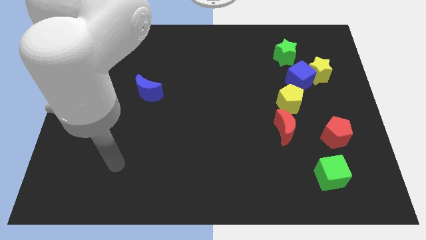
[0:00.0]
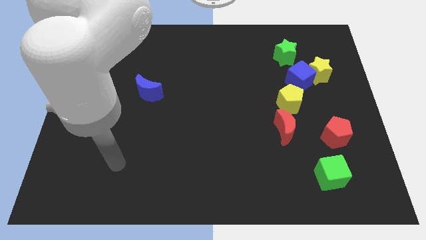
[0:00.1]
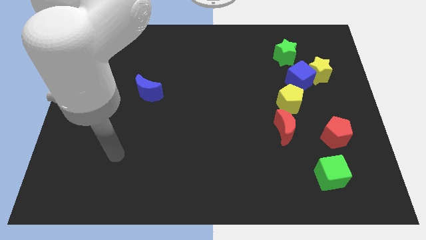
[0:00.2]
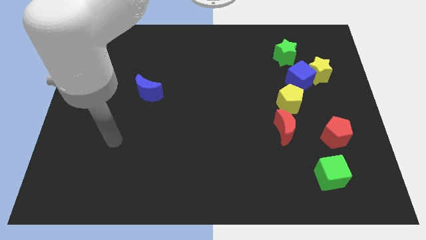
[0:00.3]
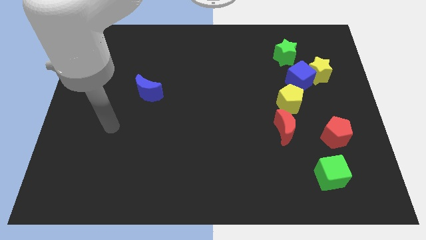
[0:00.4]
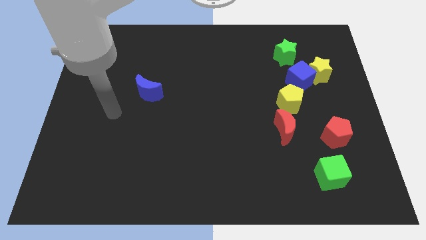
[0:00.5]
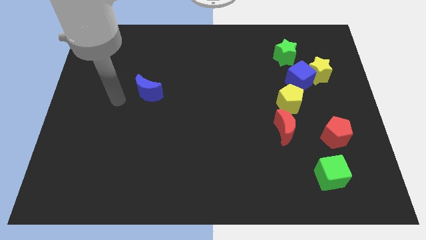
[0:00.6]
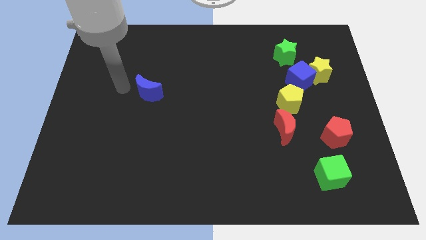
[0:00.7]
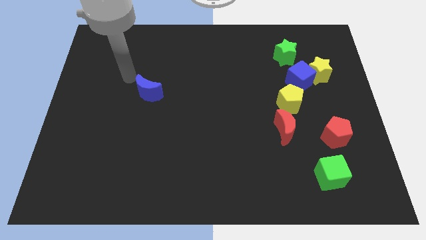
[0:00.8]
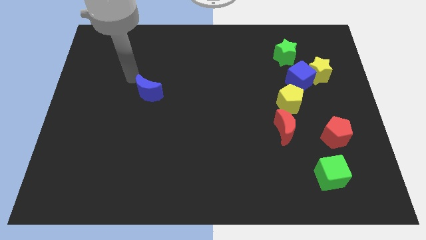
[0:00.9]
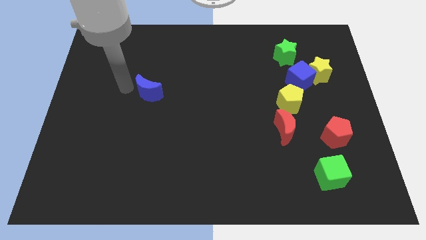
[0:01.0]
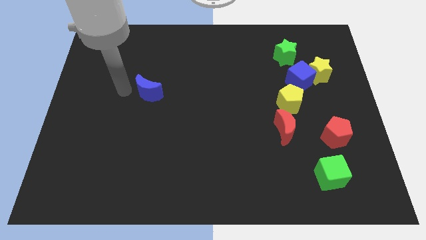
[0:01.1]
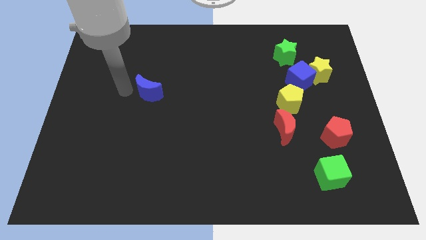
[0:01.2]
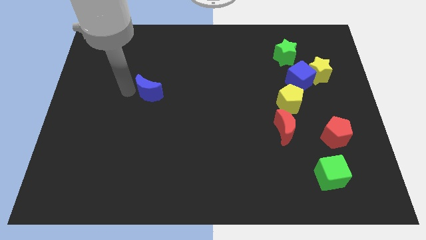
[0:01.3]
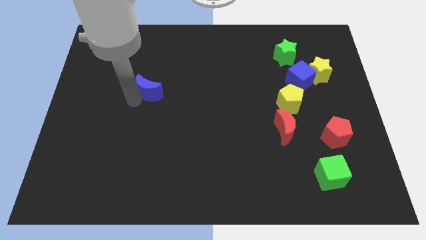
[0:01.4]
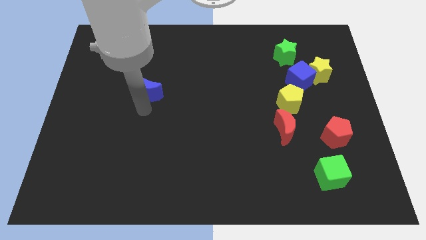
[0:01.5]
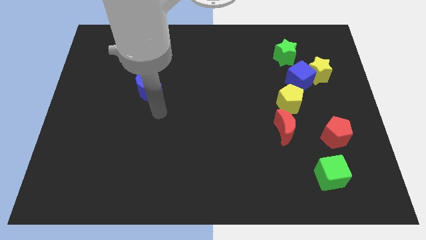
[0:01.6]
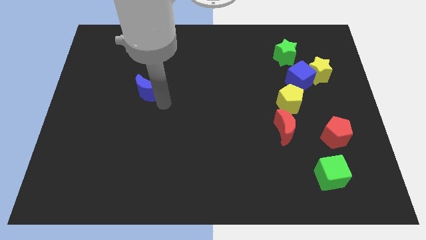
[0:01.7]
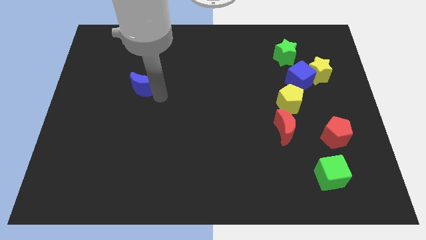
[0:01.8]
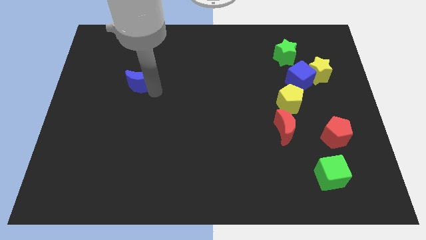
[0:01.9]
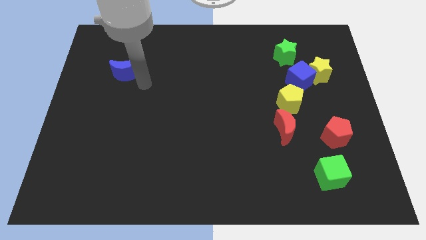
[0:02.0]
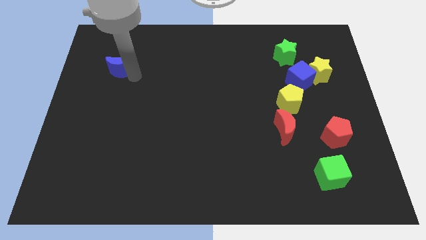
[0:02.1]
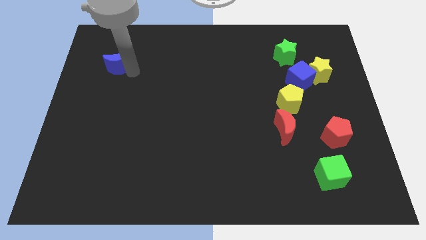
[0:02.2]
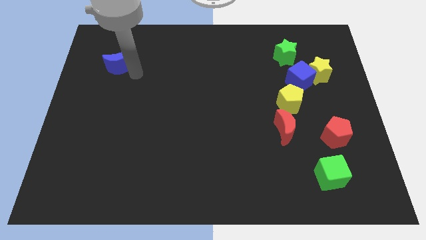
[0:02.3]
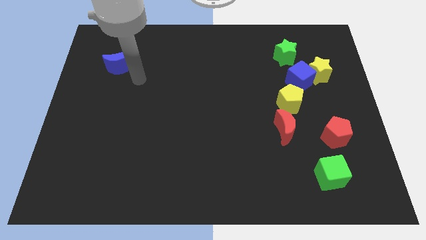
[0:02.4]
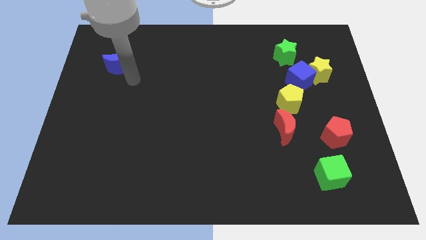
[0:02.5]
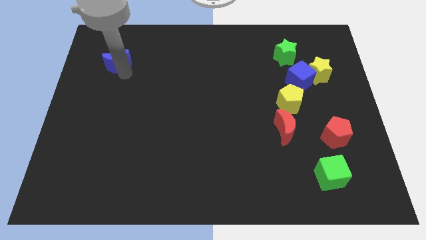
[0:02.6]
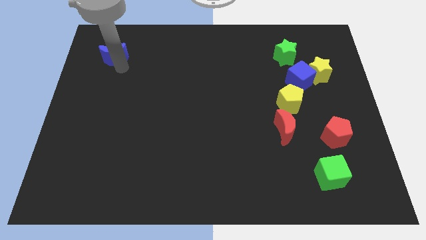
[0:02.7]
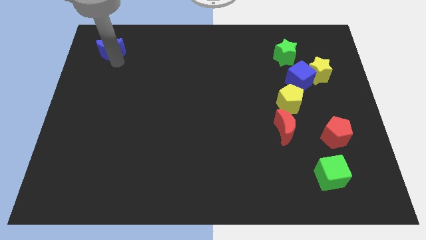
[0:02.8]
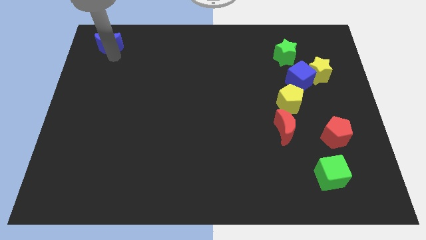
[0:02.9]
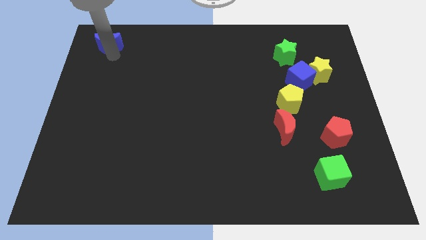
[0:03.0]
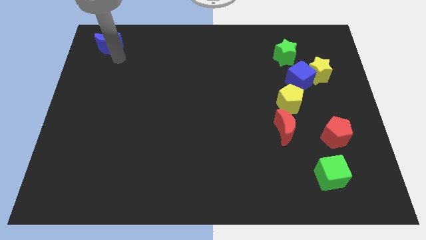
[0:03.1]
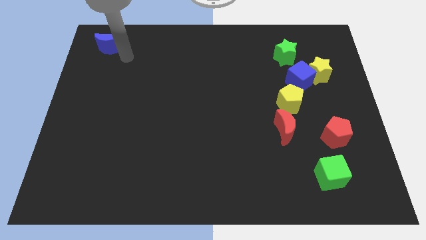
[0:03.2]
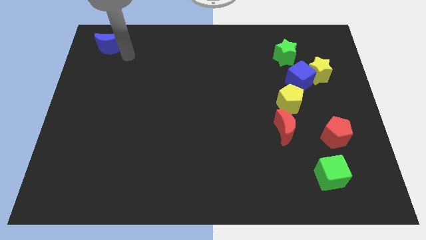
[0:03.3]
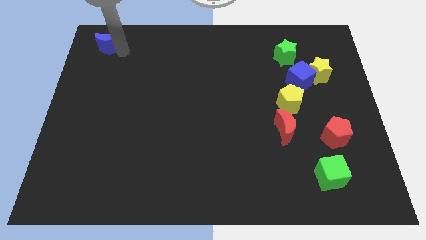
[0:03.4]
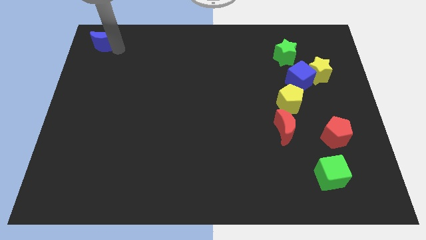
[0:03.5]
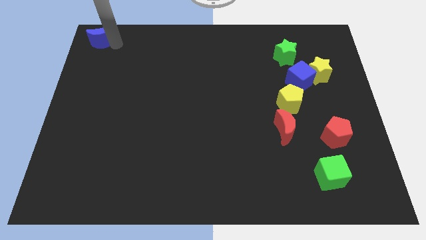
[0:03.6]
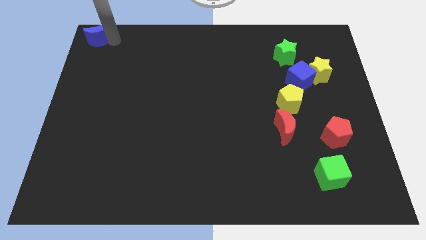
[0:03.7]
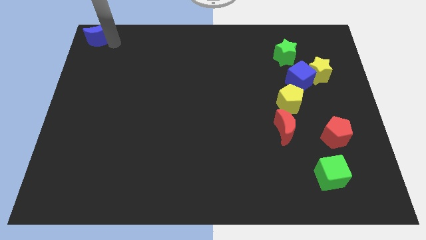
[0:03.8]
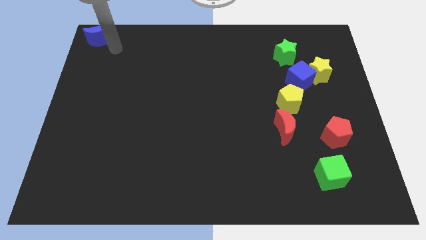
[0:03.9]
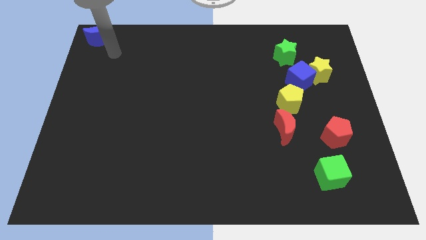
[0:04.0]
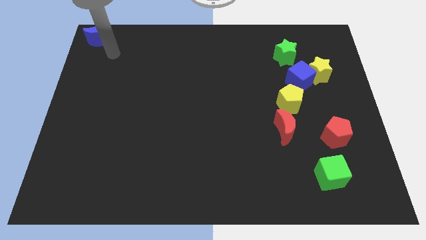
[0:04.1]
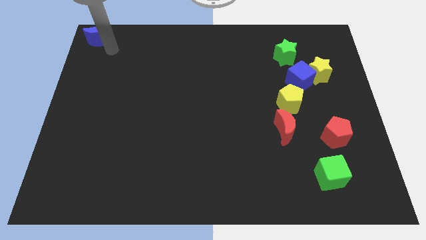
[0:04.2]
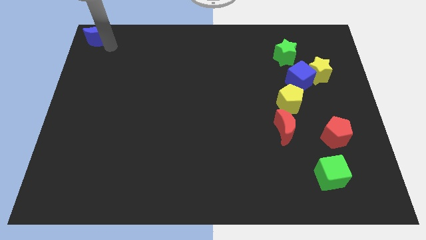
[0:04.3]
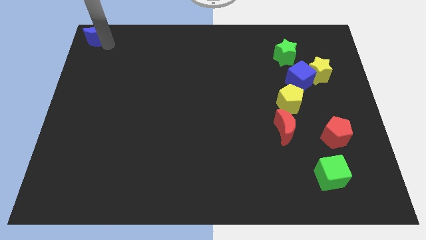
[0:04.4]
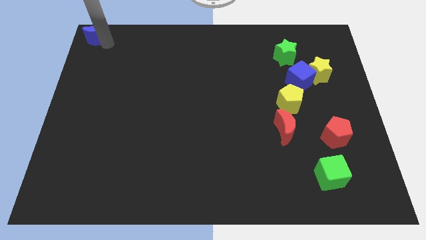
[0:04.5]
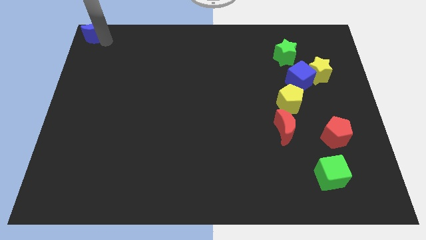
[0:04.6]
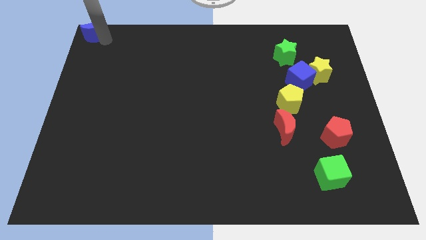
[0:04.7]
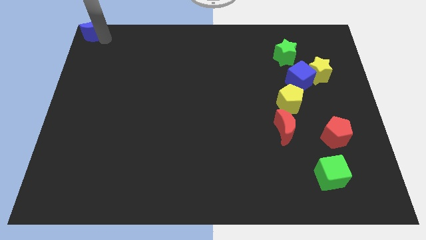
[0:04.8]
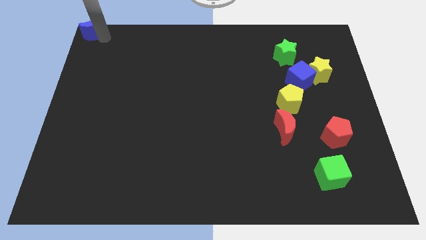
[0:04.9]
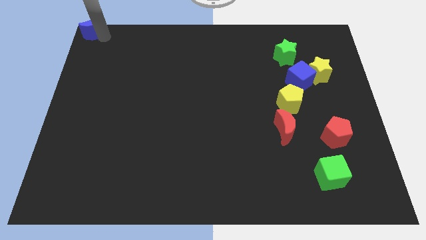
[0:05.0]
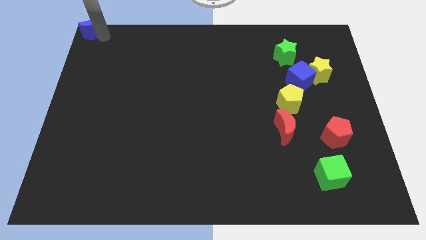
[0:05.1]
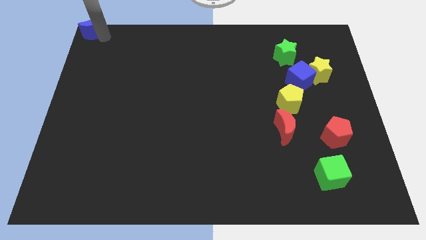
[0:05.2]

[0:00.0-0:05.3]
push the blue moon to the top left corner of the board

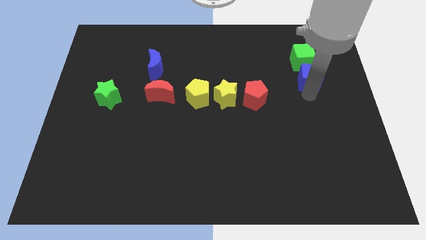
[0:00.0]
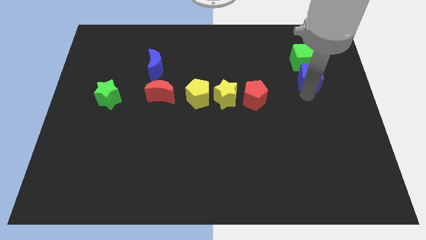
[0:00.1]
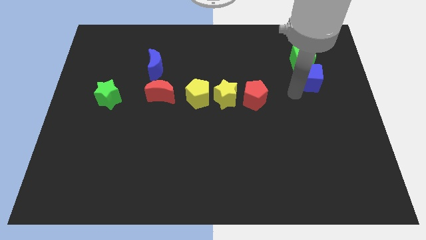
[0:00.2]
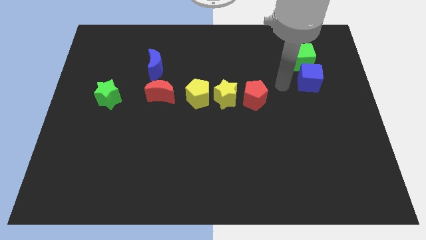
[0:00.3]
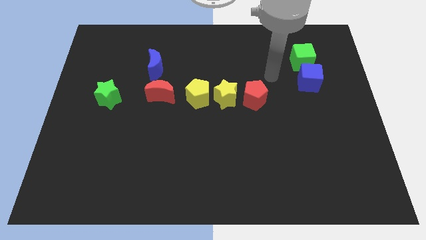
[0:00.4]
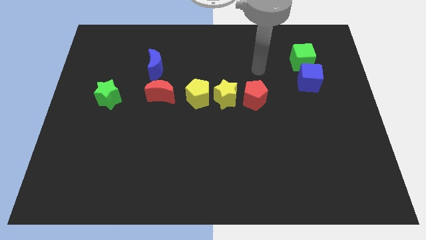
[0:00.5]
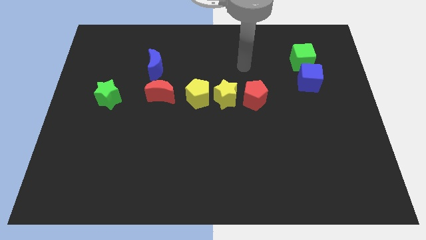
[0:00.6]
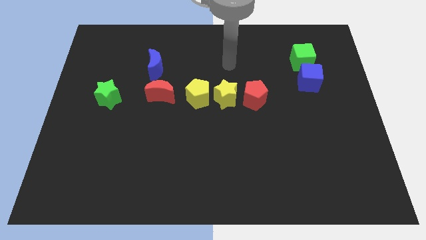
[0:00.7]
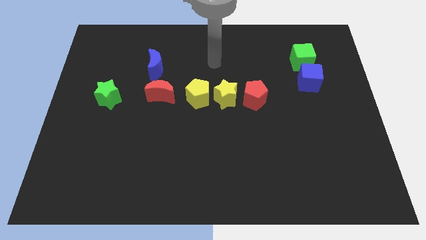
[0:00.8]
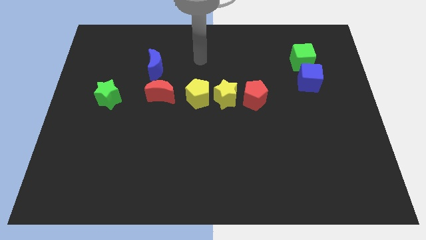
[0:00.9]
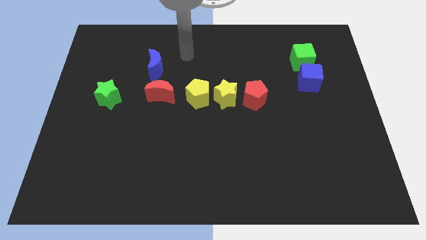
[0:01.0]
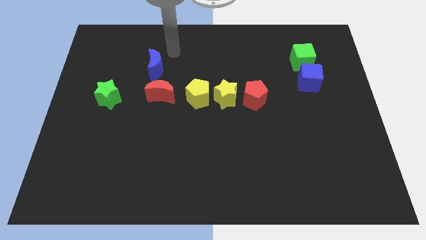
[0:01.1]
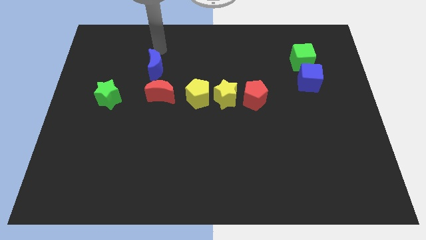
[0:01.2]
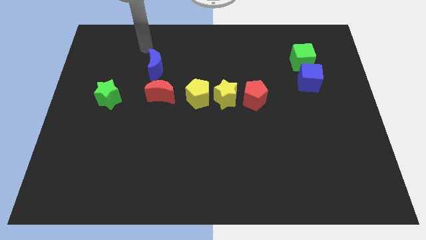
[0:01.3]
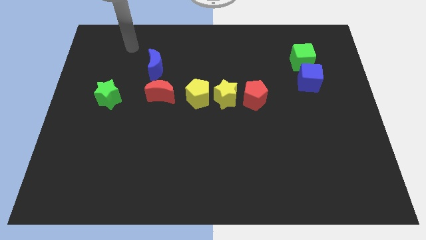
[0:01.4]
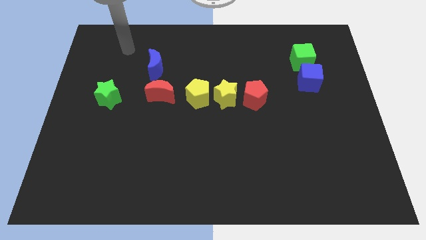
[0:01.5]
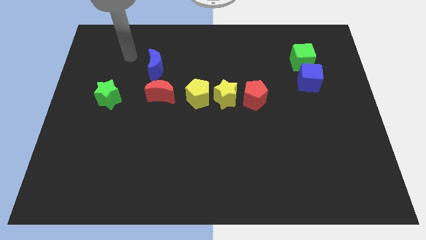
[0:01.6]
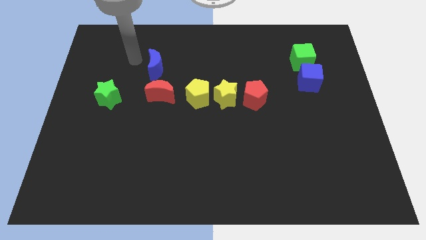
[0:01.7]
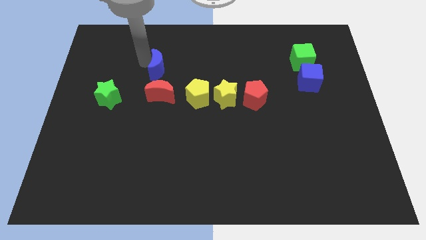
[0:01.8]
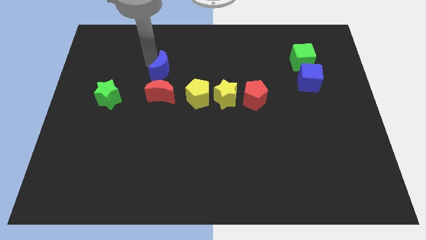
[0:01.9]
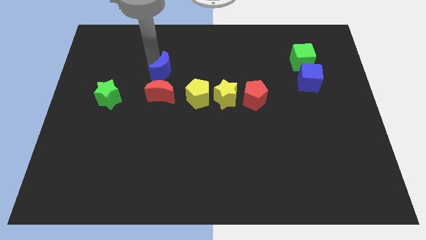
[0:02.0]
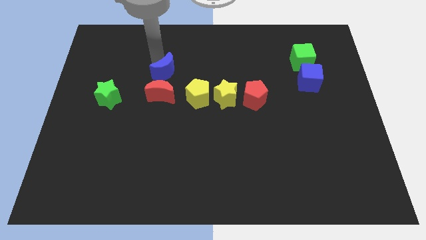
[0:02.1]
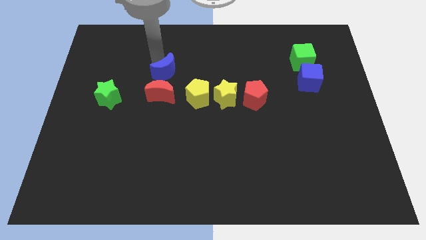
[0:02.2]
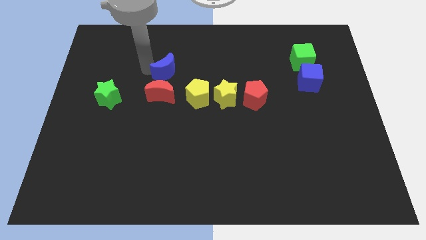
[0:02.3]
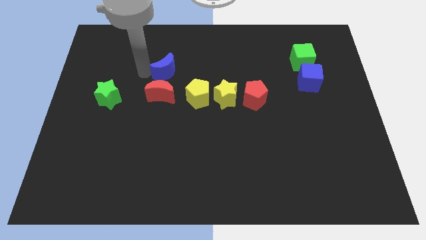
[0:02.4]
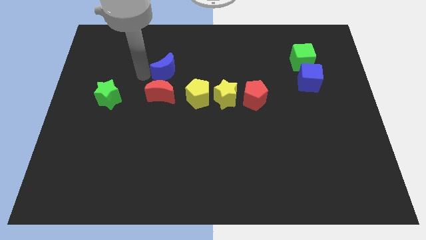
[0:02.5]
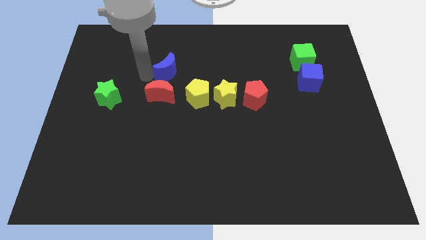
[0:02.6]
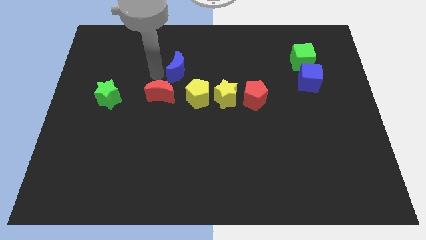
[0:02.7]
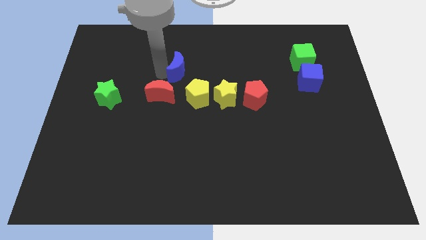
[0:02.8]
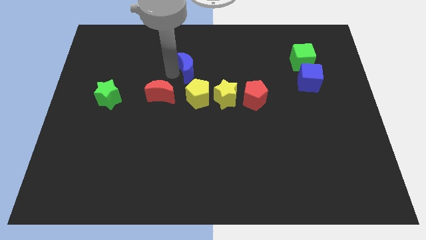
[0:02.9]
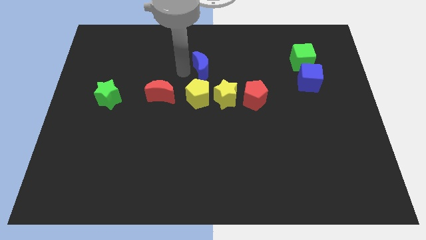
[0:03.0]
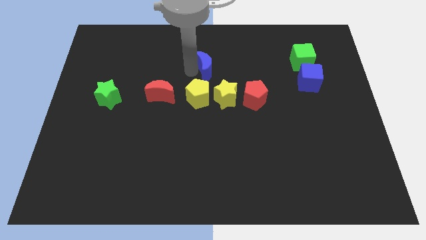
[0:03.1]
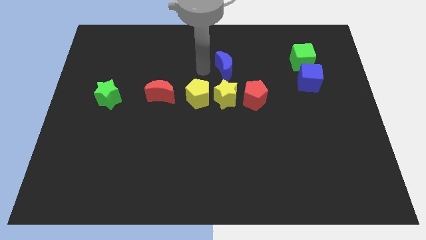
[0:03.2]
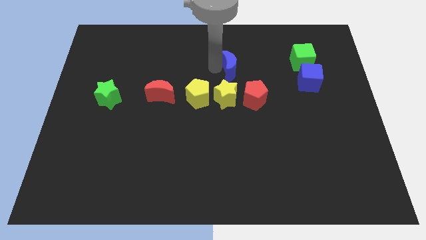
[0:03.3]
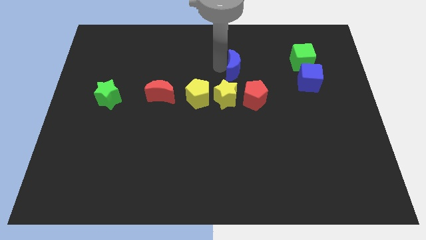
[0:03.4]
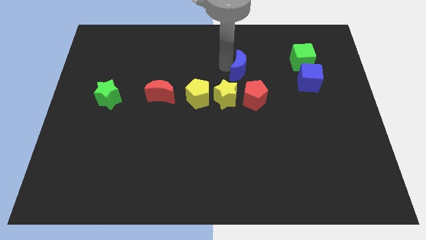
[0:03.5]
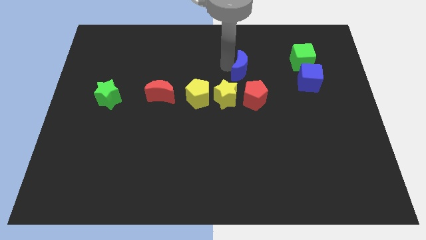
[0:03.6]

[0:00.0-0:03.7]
slide the blue crescent slightly to the right
